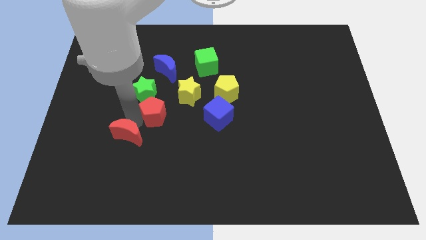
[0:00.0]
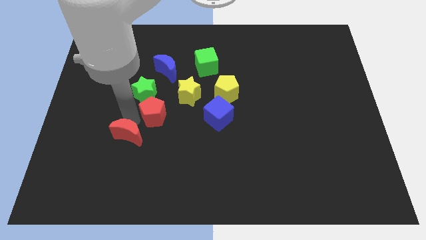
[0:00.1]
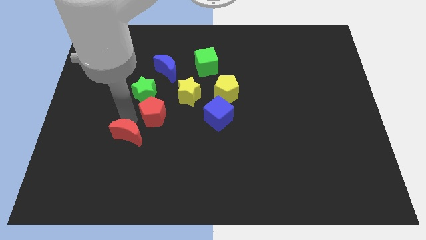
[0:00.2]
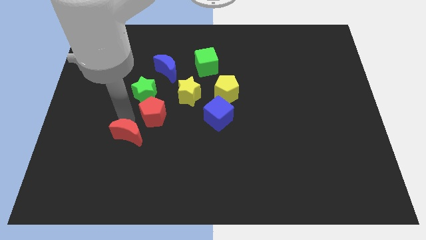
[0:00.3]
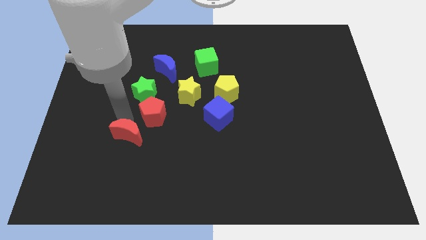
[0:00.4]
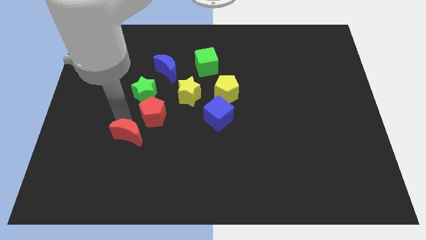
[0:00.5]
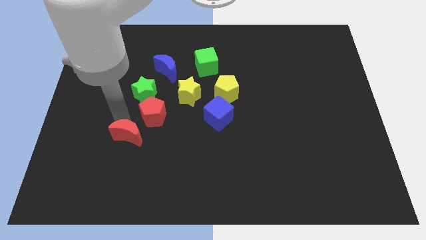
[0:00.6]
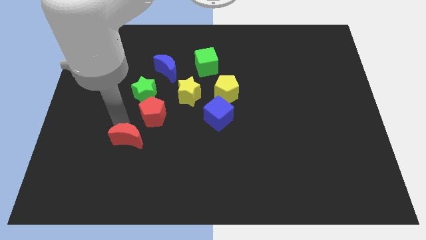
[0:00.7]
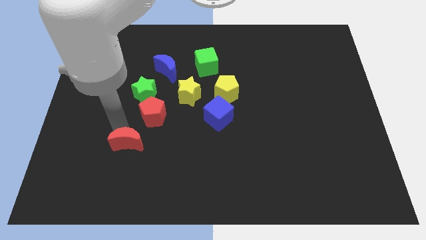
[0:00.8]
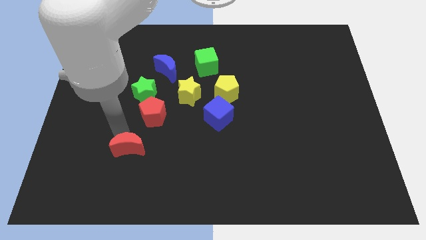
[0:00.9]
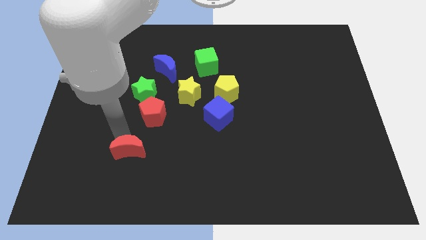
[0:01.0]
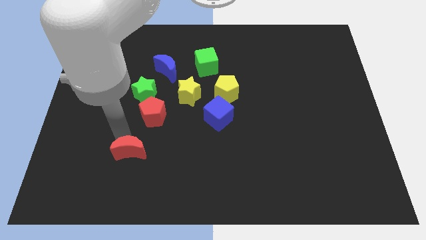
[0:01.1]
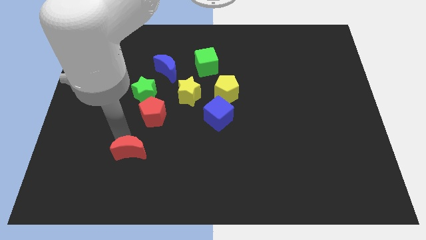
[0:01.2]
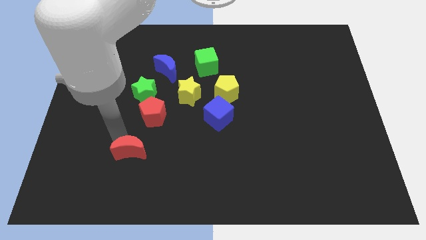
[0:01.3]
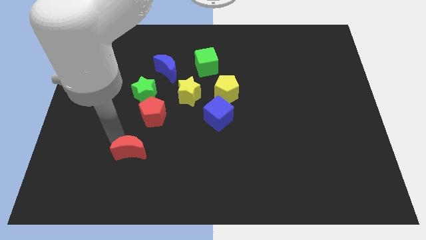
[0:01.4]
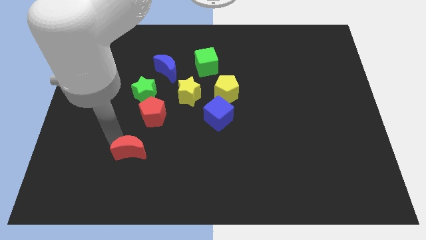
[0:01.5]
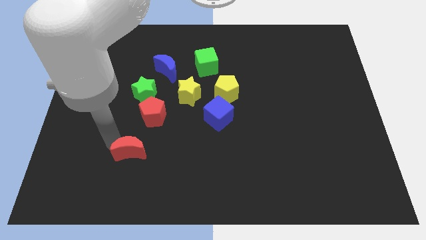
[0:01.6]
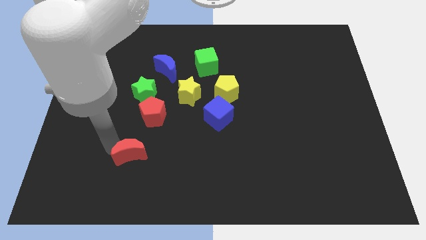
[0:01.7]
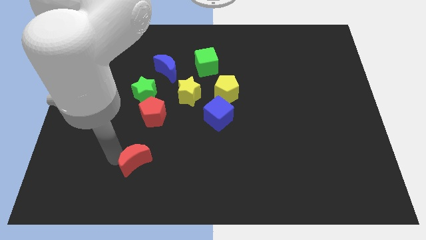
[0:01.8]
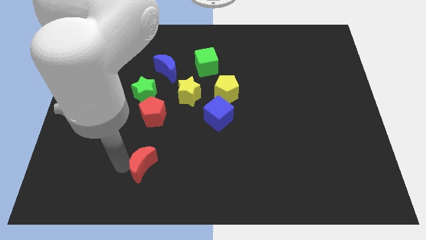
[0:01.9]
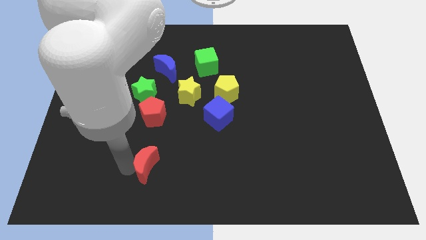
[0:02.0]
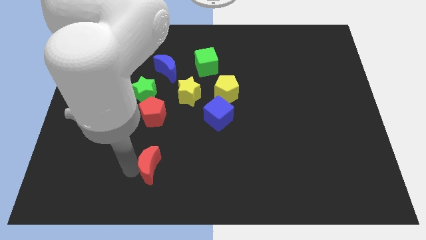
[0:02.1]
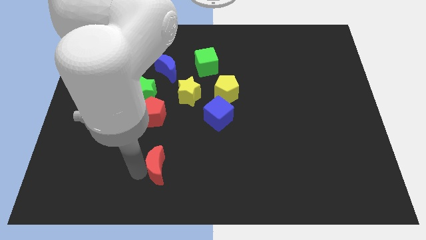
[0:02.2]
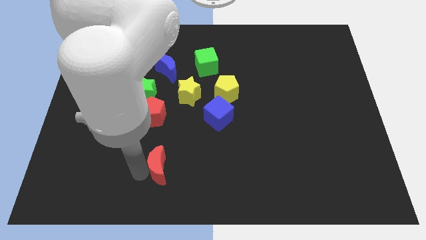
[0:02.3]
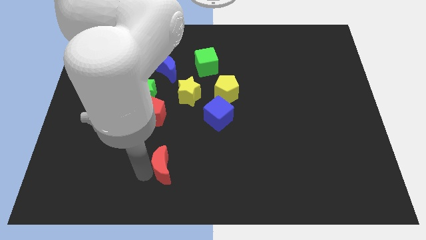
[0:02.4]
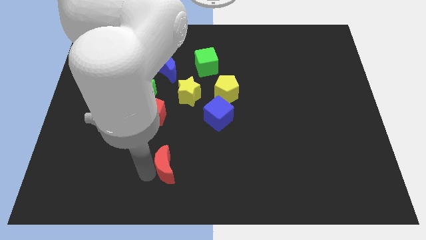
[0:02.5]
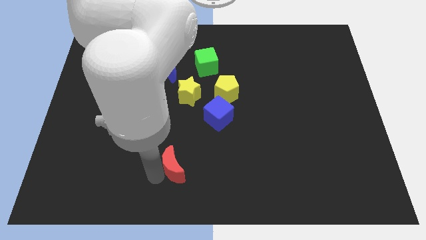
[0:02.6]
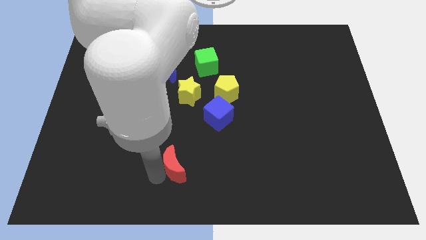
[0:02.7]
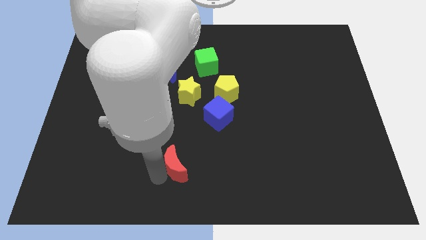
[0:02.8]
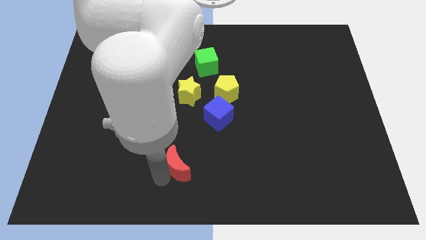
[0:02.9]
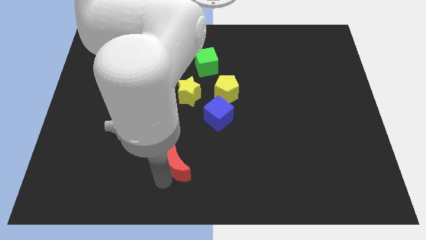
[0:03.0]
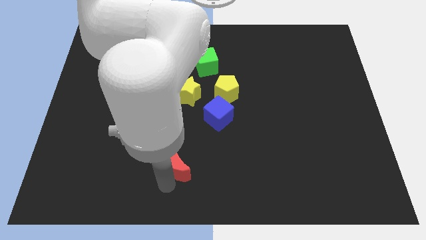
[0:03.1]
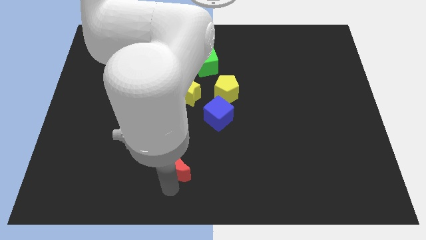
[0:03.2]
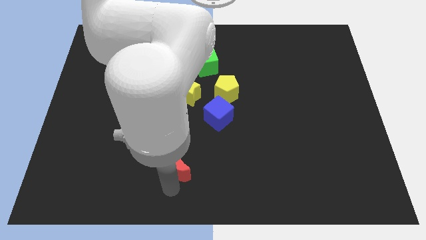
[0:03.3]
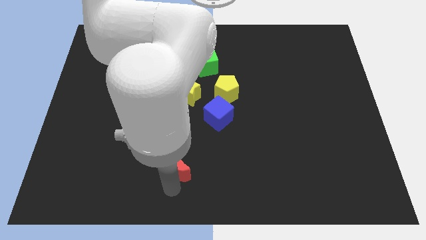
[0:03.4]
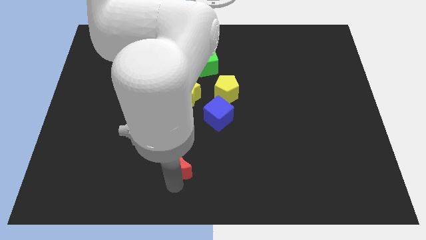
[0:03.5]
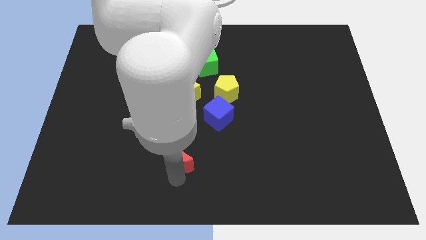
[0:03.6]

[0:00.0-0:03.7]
push the red crescent towards the bottom side of the board

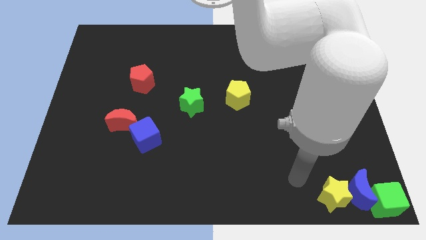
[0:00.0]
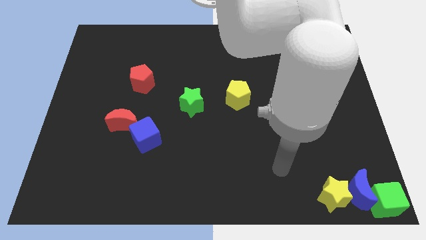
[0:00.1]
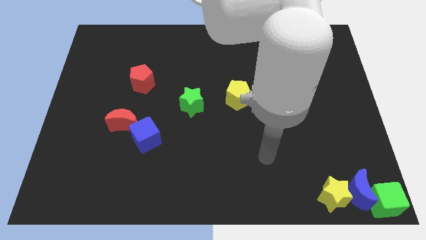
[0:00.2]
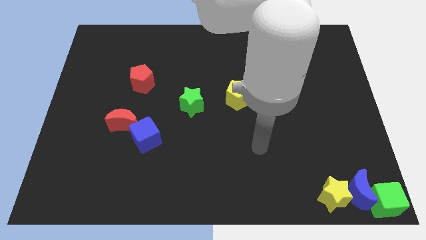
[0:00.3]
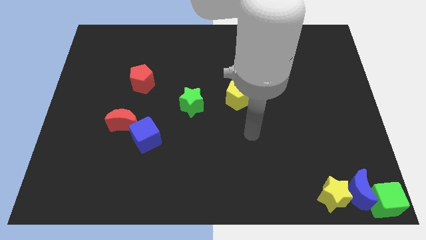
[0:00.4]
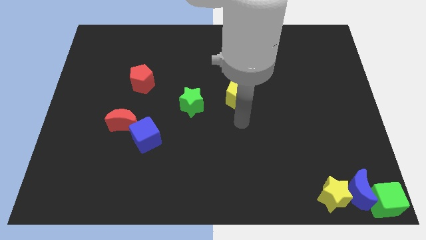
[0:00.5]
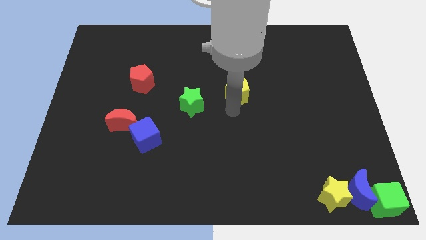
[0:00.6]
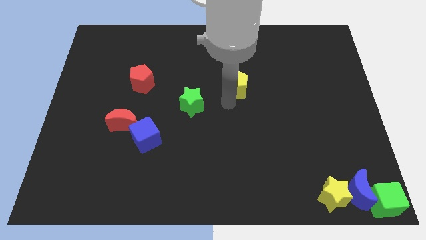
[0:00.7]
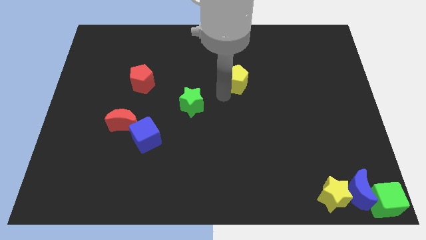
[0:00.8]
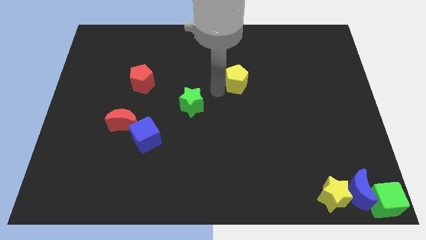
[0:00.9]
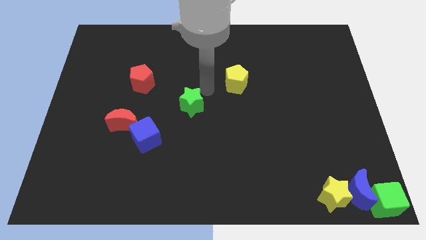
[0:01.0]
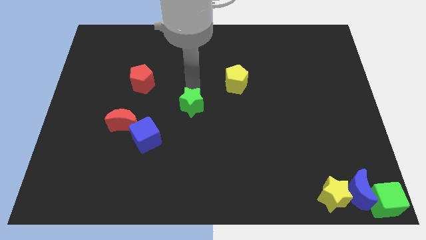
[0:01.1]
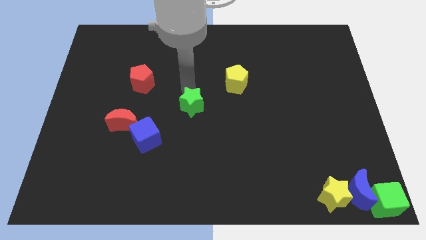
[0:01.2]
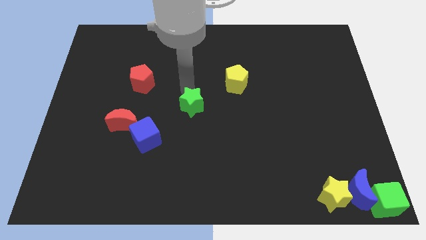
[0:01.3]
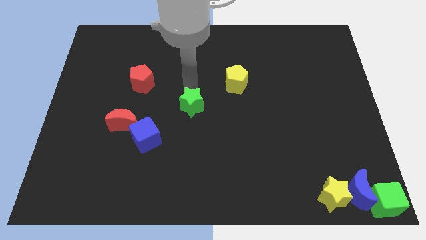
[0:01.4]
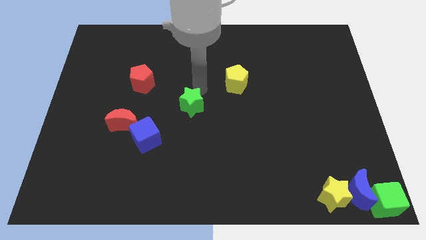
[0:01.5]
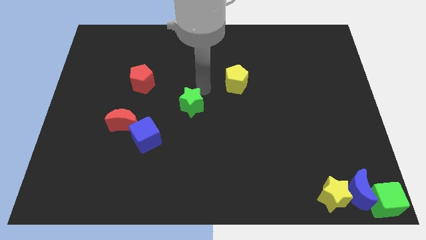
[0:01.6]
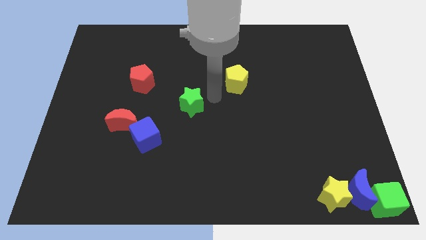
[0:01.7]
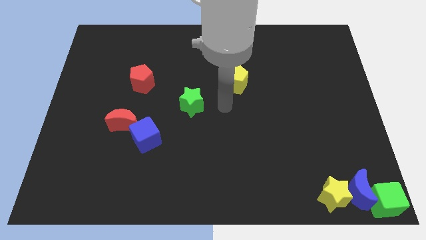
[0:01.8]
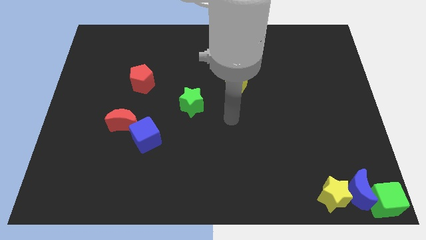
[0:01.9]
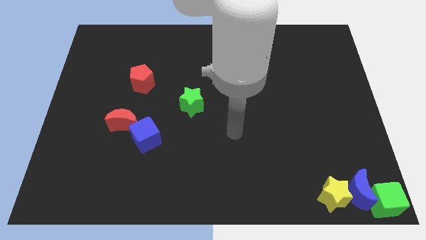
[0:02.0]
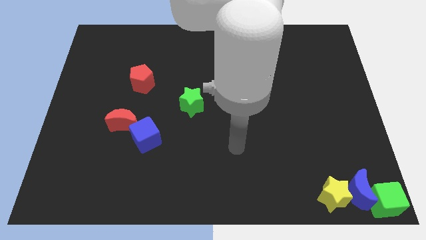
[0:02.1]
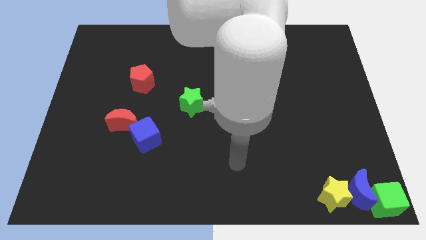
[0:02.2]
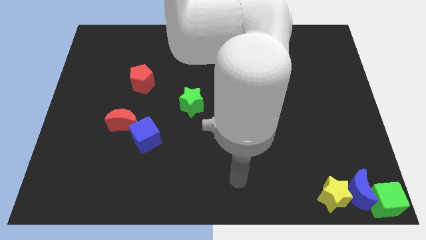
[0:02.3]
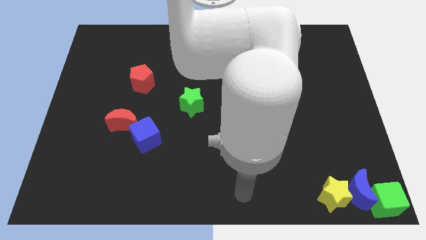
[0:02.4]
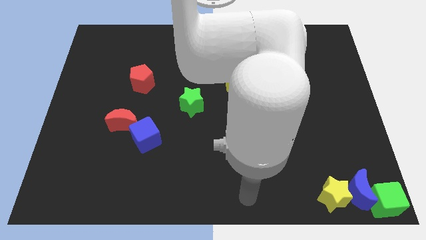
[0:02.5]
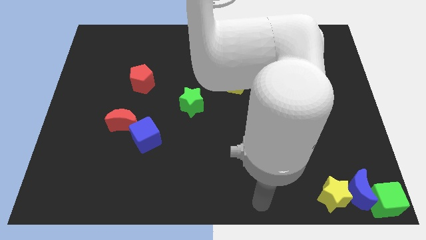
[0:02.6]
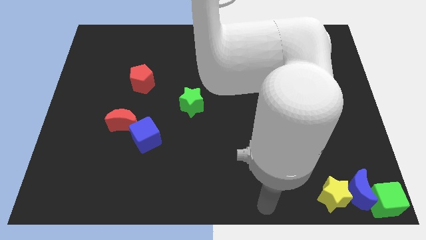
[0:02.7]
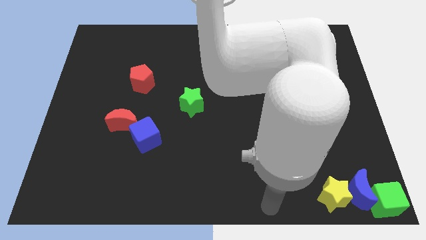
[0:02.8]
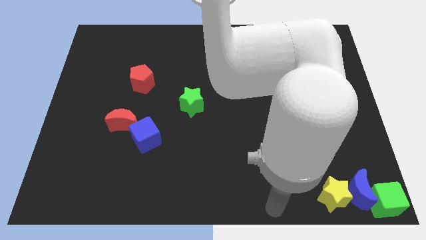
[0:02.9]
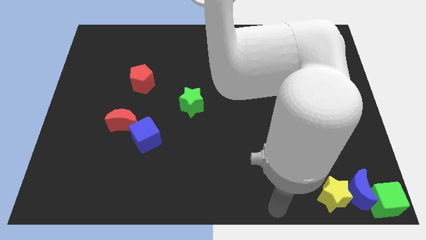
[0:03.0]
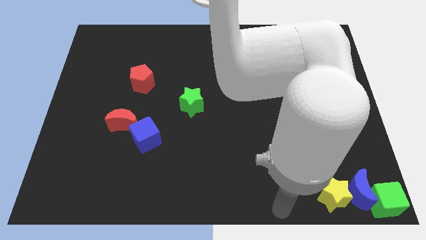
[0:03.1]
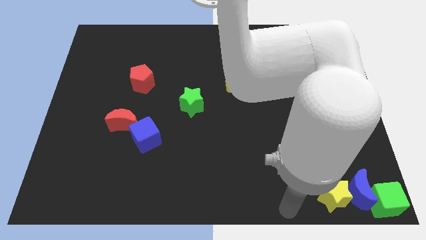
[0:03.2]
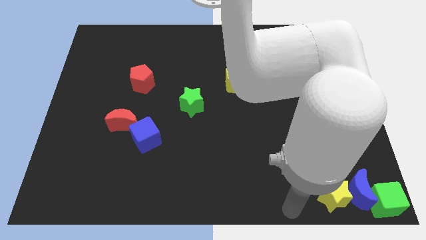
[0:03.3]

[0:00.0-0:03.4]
slightly move the yellow pentagon to the right of the board

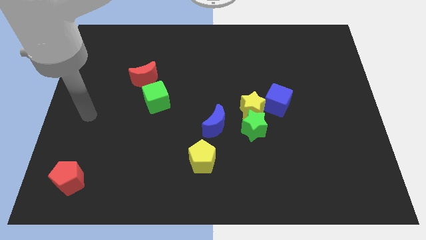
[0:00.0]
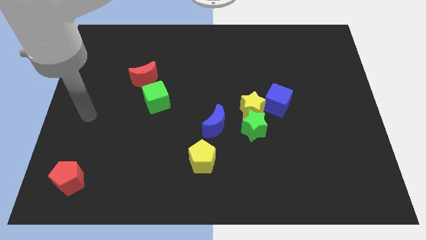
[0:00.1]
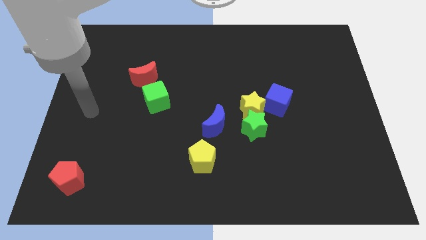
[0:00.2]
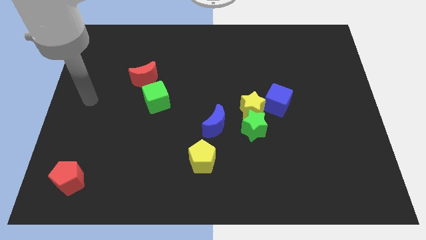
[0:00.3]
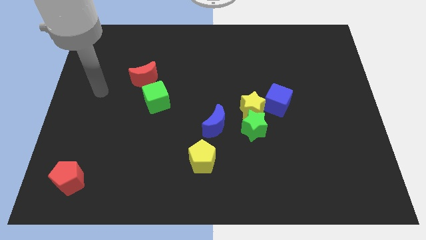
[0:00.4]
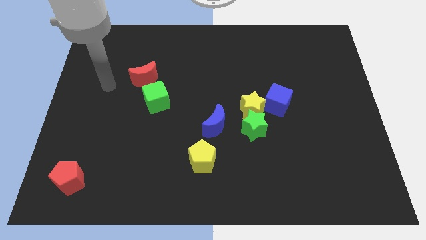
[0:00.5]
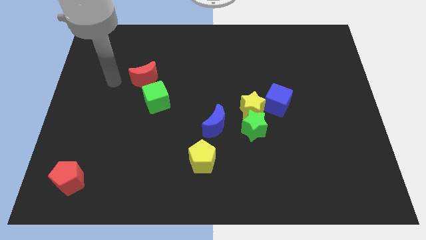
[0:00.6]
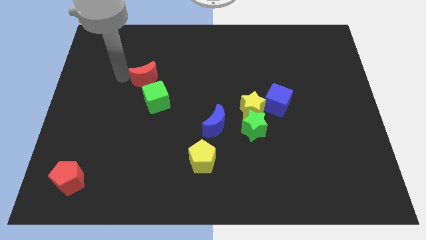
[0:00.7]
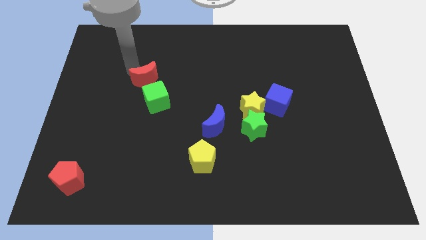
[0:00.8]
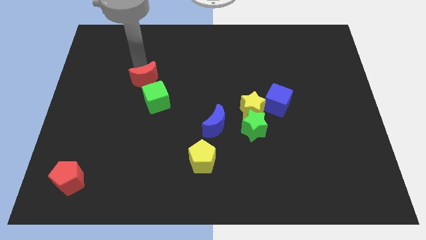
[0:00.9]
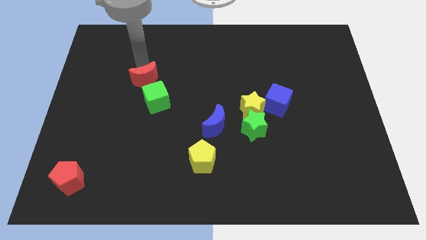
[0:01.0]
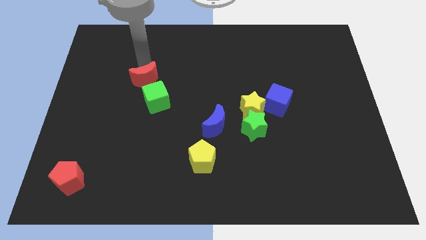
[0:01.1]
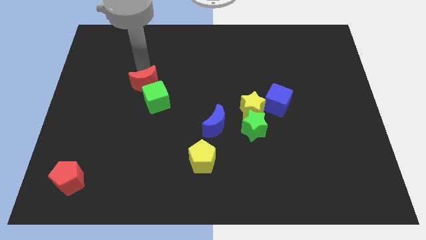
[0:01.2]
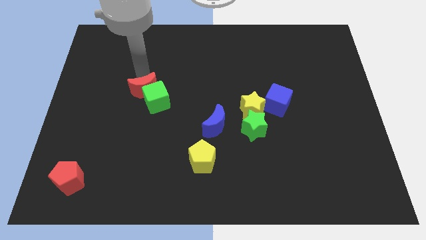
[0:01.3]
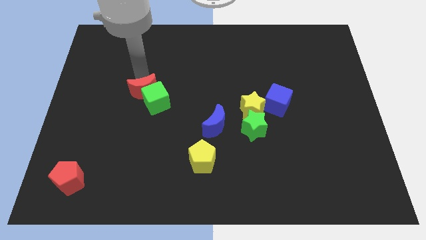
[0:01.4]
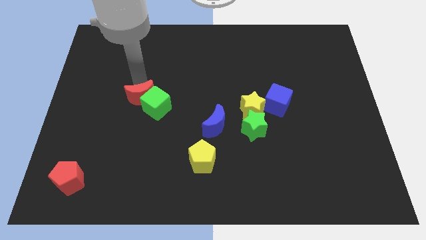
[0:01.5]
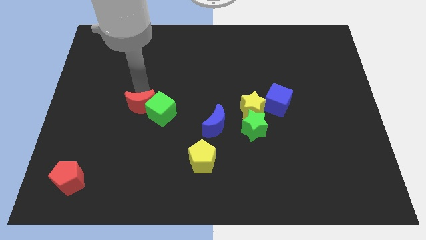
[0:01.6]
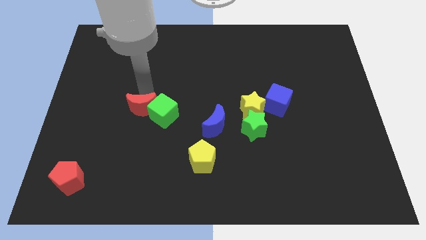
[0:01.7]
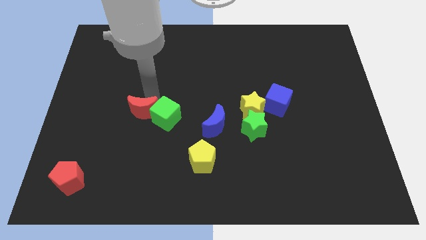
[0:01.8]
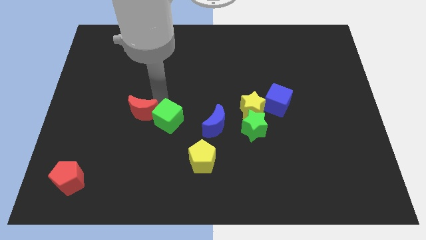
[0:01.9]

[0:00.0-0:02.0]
push red crescent slightly downwards
